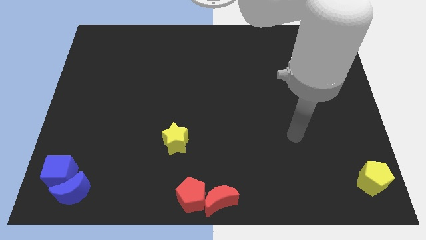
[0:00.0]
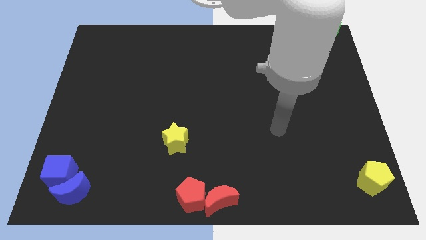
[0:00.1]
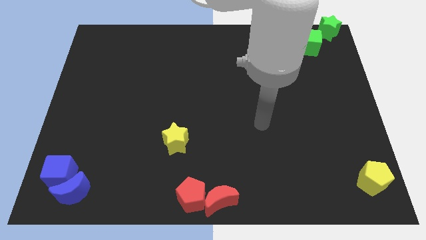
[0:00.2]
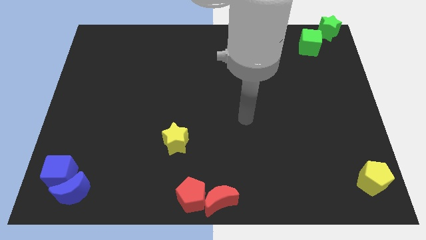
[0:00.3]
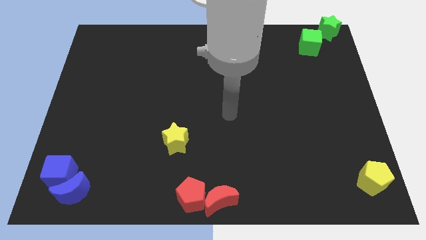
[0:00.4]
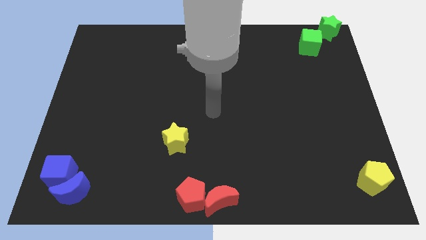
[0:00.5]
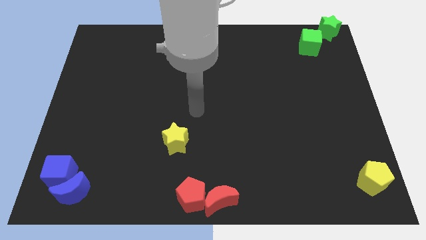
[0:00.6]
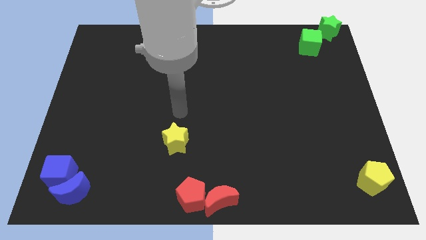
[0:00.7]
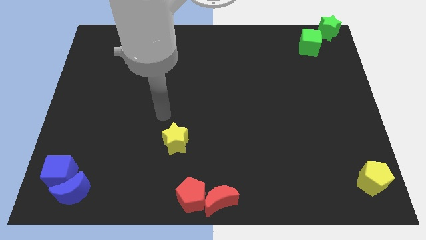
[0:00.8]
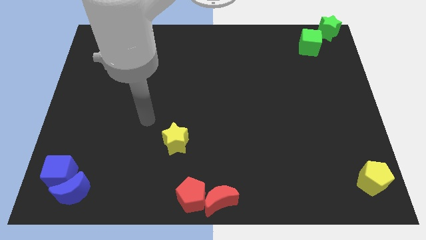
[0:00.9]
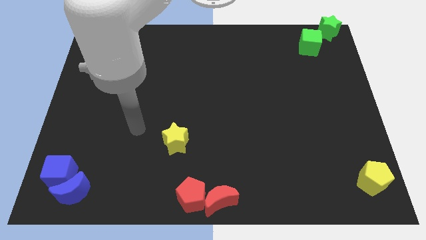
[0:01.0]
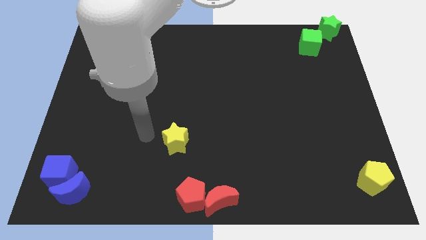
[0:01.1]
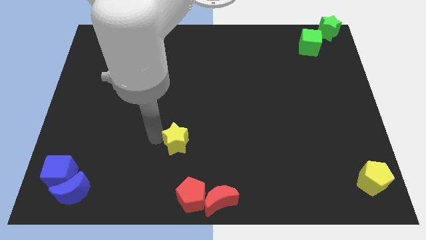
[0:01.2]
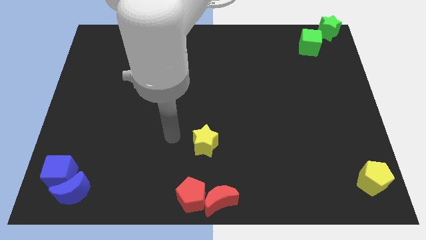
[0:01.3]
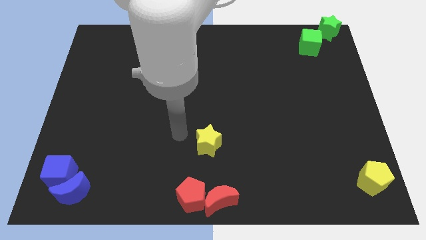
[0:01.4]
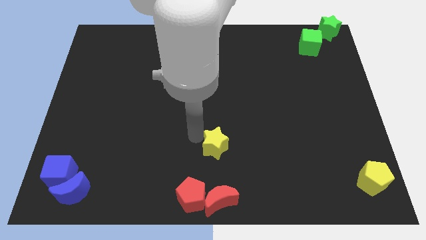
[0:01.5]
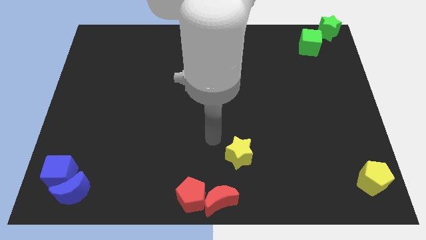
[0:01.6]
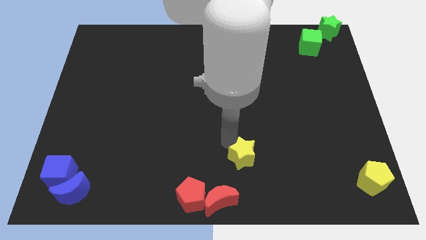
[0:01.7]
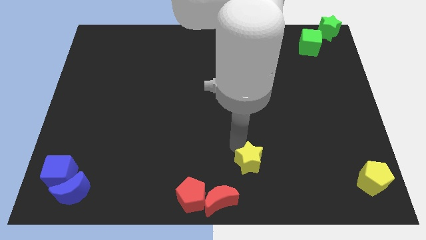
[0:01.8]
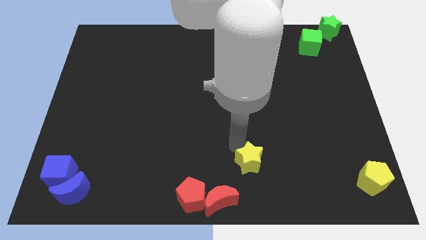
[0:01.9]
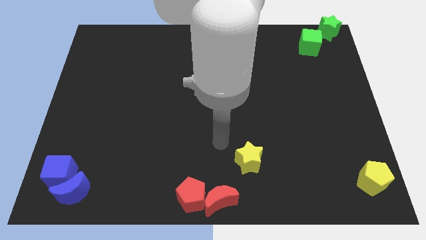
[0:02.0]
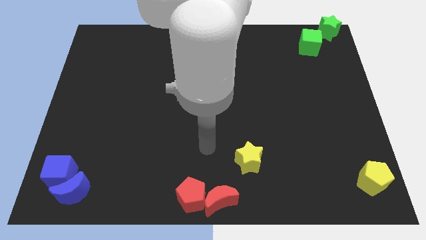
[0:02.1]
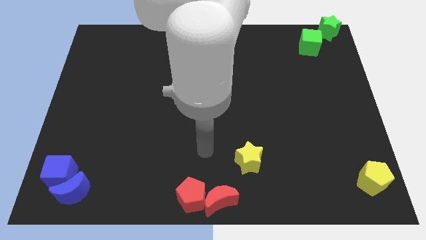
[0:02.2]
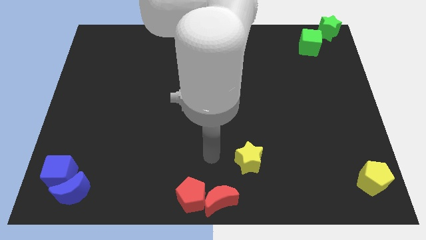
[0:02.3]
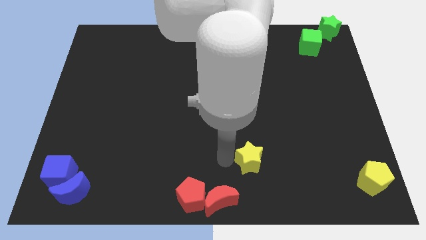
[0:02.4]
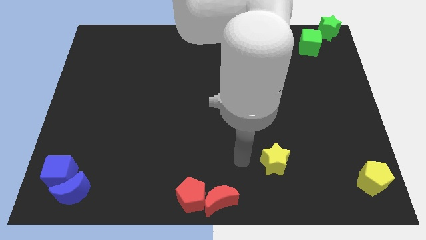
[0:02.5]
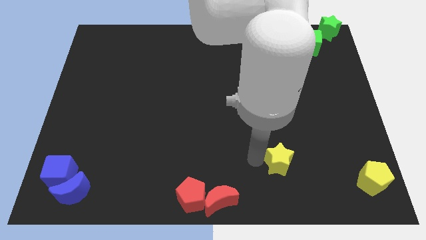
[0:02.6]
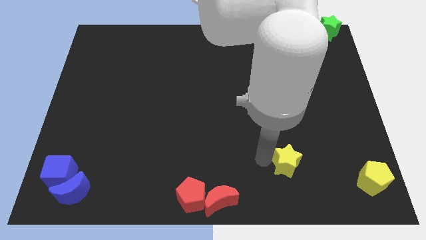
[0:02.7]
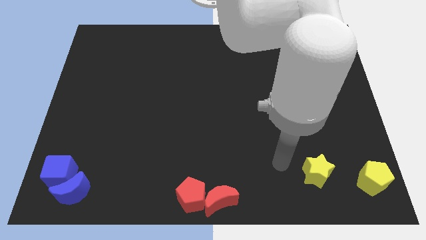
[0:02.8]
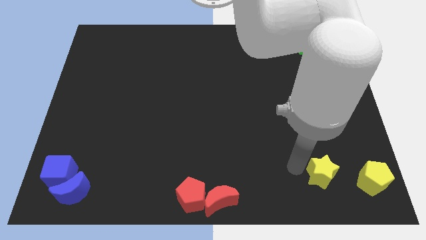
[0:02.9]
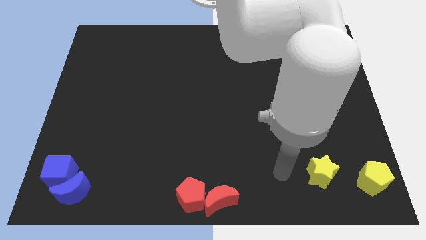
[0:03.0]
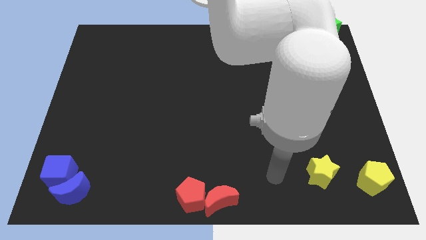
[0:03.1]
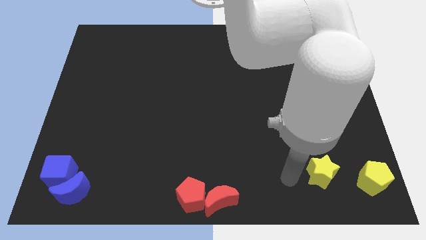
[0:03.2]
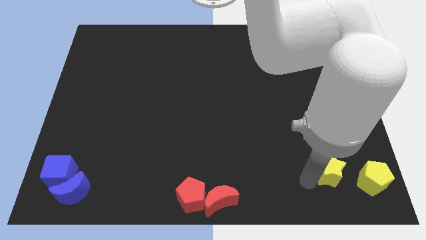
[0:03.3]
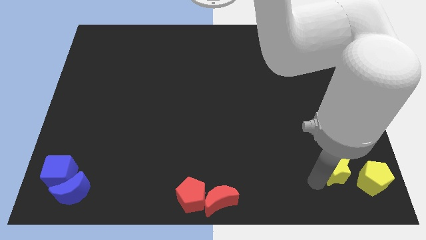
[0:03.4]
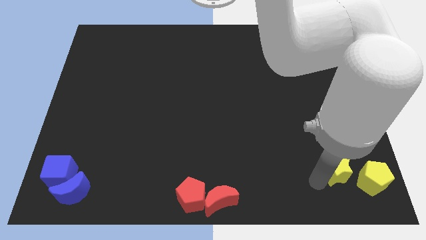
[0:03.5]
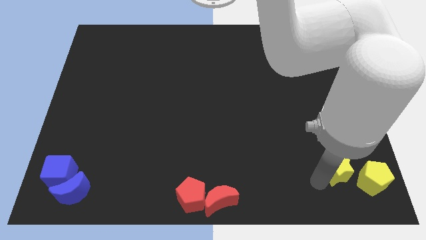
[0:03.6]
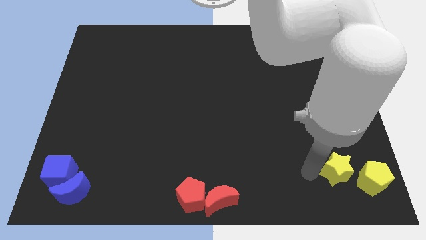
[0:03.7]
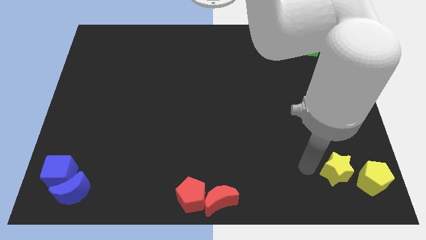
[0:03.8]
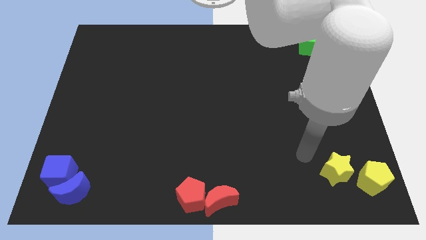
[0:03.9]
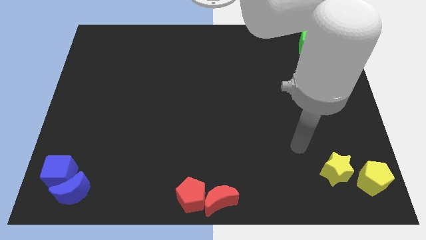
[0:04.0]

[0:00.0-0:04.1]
push the yellow star towards the yellow pentagon

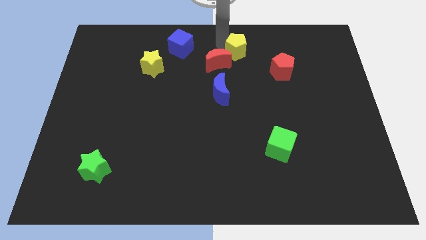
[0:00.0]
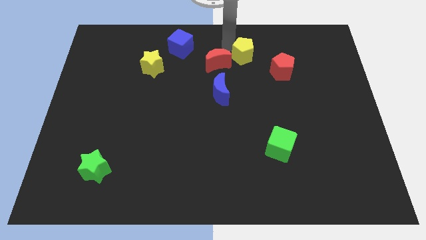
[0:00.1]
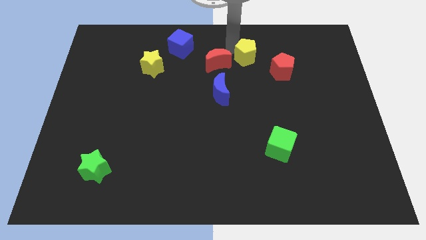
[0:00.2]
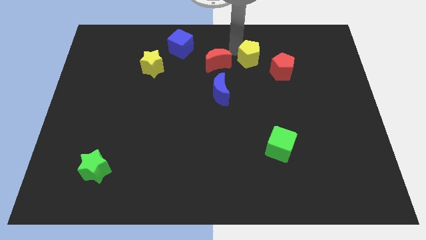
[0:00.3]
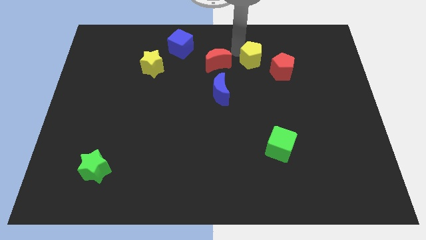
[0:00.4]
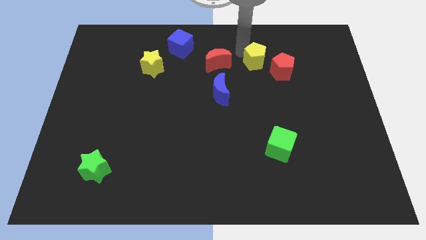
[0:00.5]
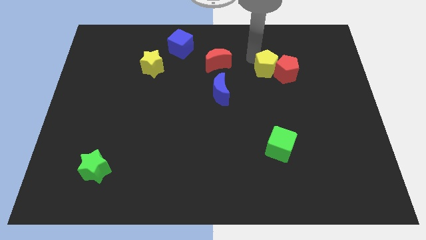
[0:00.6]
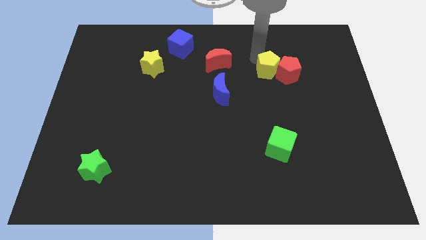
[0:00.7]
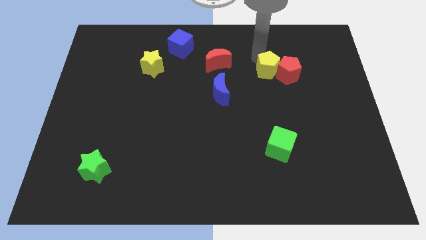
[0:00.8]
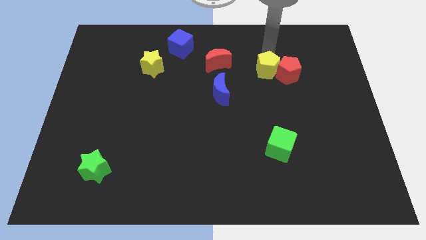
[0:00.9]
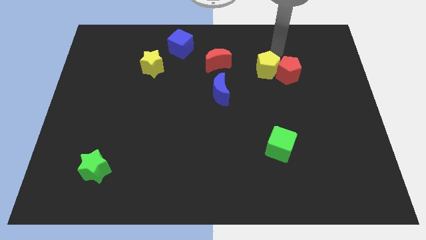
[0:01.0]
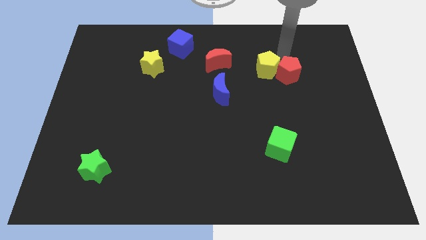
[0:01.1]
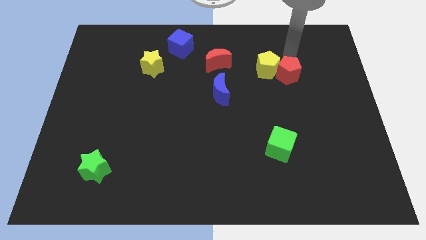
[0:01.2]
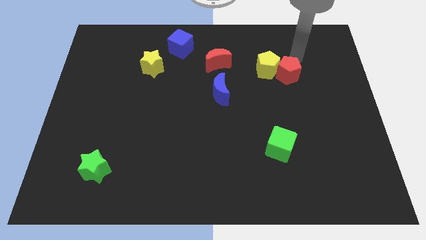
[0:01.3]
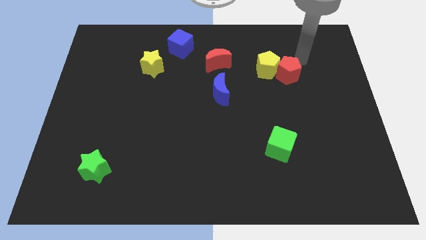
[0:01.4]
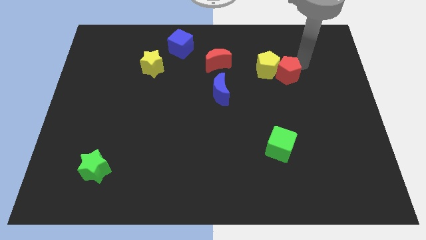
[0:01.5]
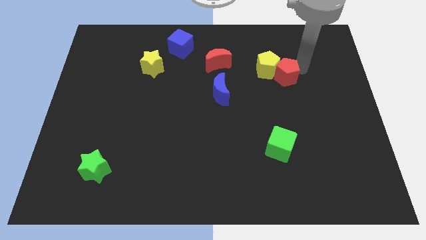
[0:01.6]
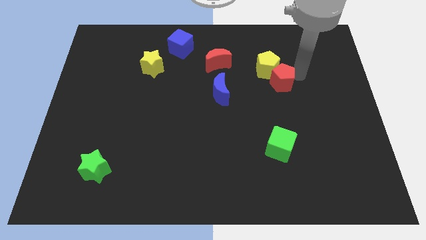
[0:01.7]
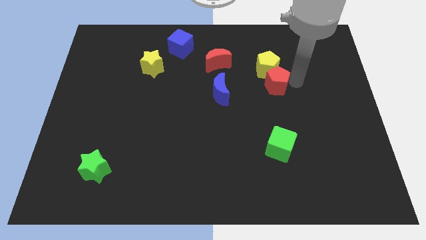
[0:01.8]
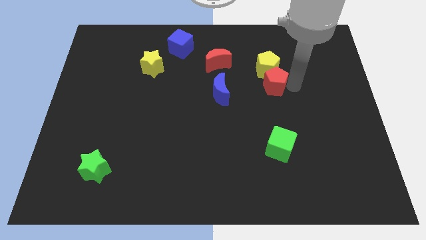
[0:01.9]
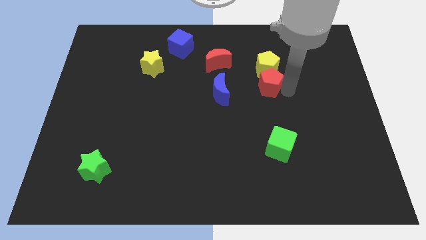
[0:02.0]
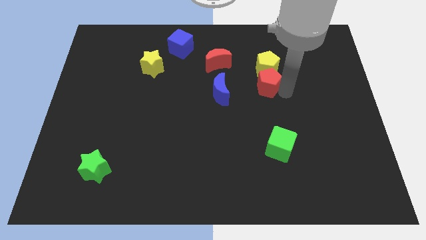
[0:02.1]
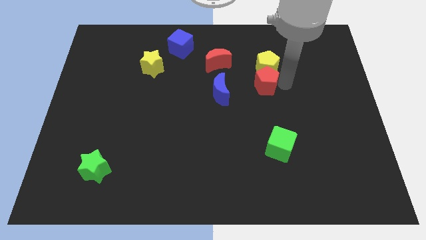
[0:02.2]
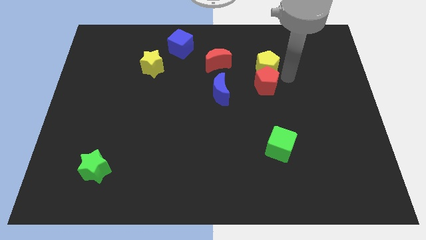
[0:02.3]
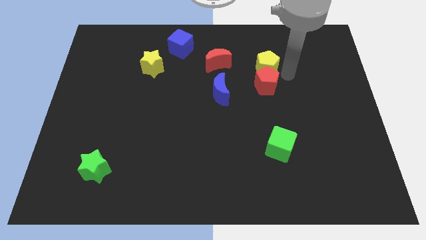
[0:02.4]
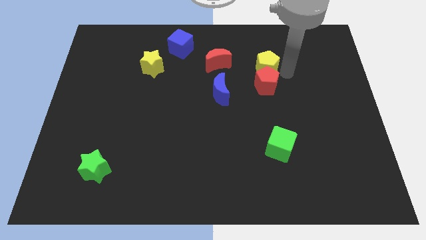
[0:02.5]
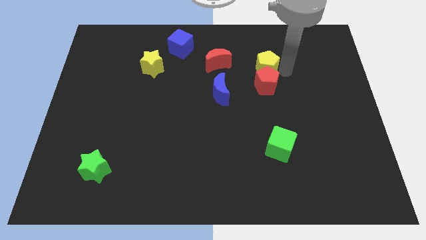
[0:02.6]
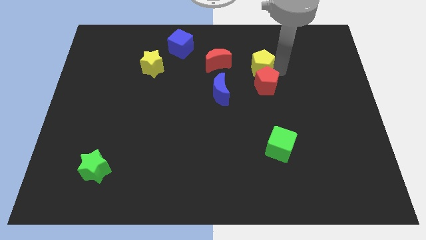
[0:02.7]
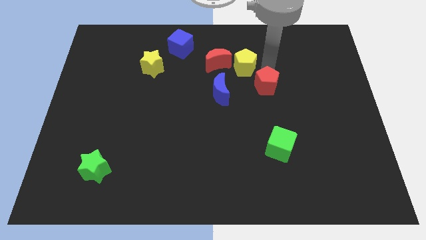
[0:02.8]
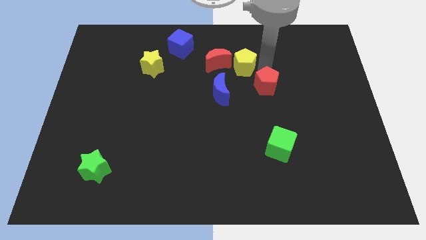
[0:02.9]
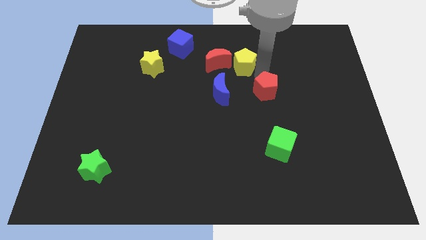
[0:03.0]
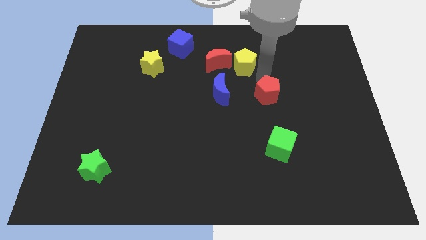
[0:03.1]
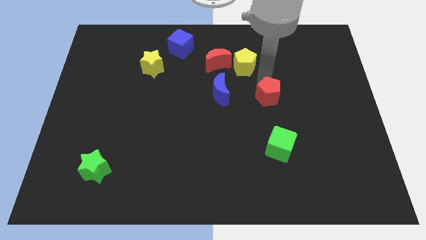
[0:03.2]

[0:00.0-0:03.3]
place your arm in between the yellow pentagon and red pentagon

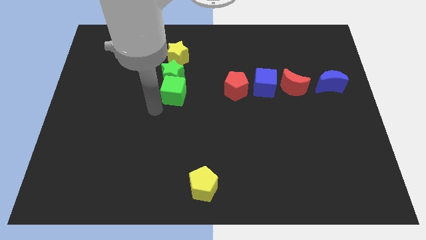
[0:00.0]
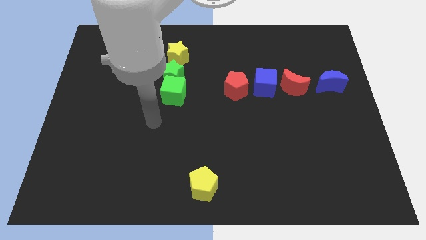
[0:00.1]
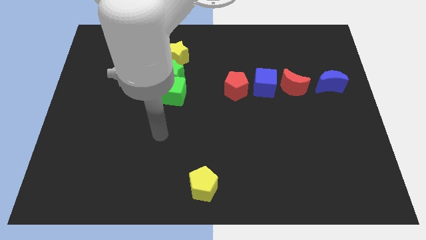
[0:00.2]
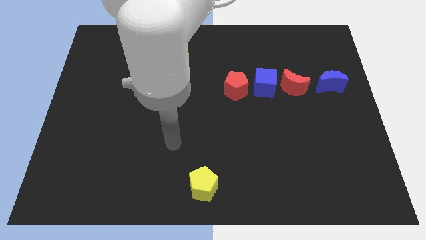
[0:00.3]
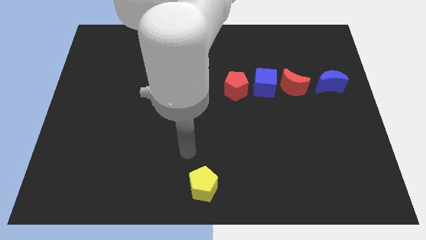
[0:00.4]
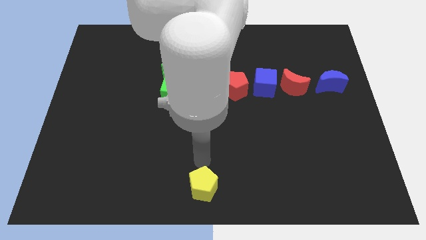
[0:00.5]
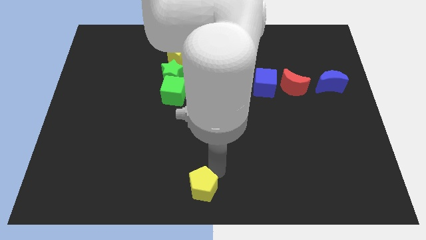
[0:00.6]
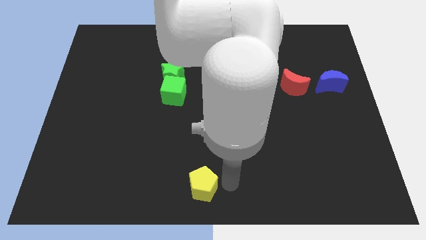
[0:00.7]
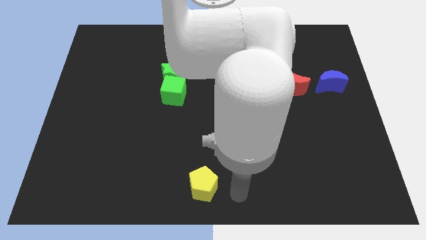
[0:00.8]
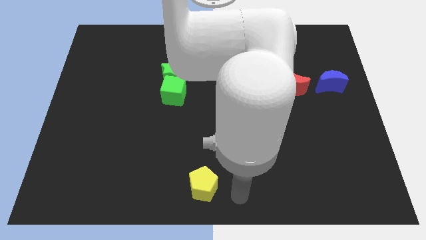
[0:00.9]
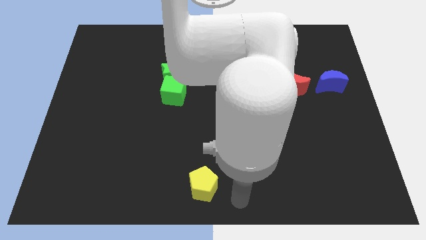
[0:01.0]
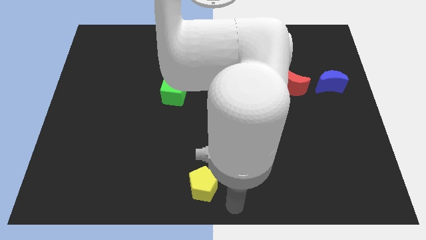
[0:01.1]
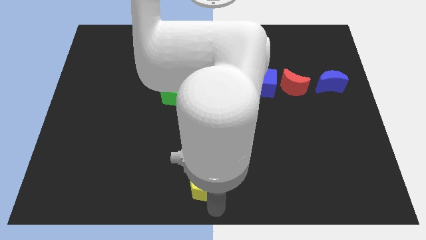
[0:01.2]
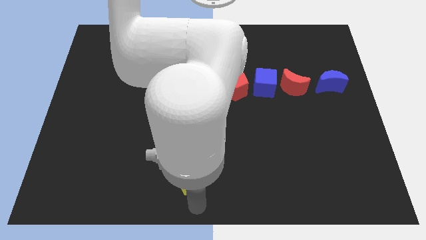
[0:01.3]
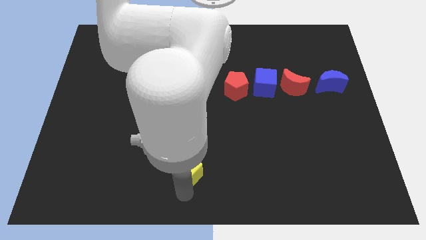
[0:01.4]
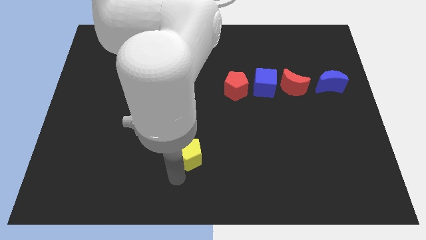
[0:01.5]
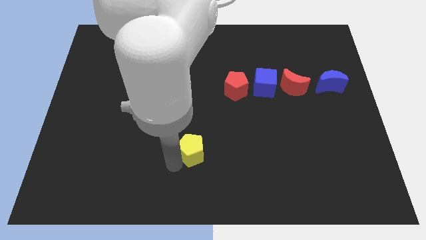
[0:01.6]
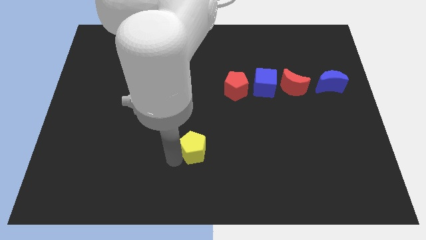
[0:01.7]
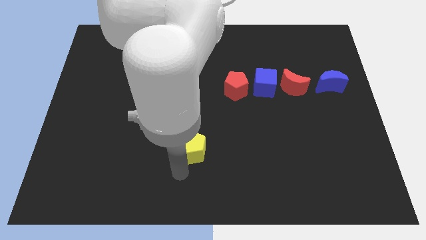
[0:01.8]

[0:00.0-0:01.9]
slightly push the yellow pentagon towards top side
